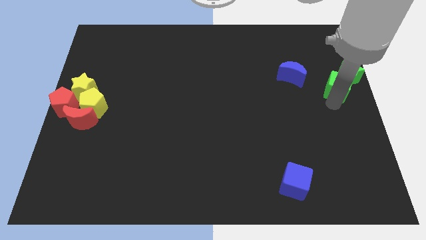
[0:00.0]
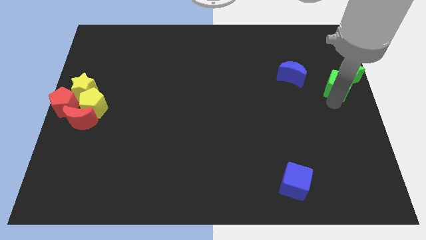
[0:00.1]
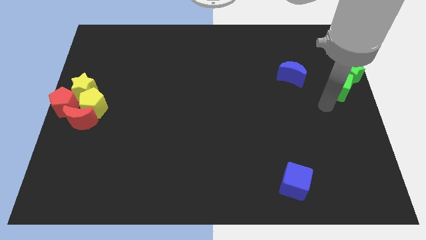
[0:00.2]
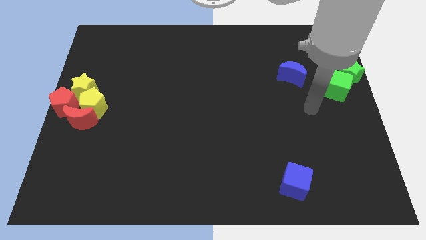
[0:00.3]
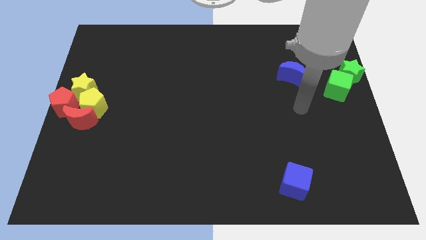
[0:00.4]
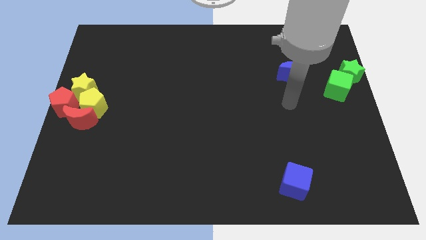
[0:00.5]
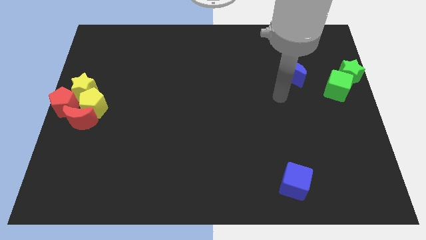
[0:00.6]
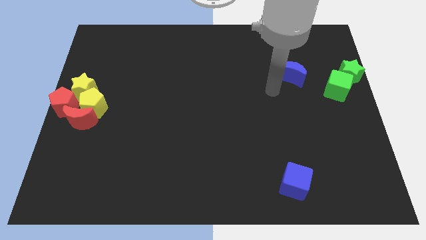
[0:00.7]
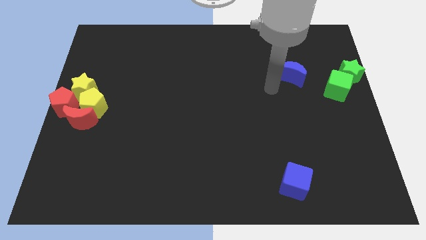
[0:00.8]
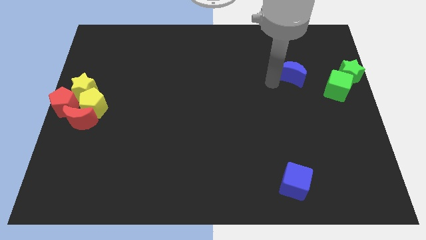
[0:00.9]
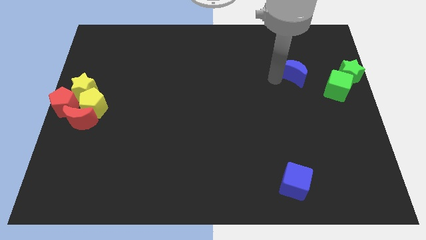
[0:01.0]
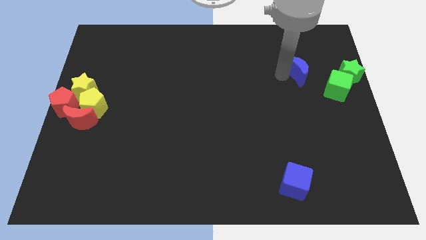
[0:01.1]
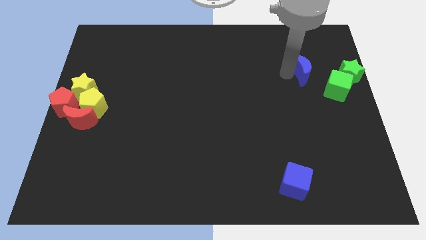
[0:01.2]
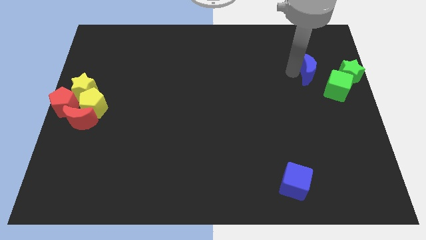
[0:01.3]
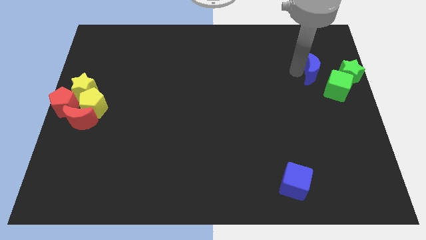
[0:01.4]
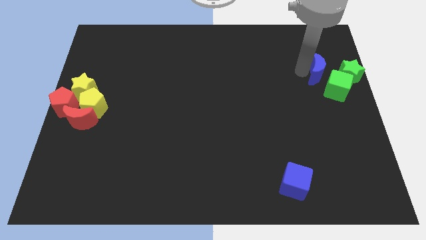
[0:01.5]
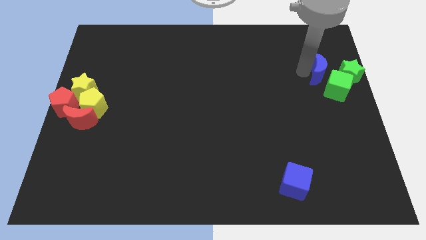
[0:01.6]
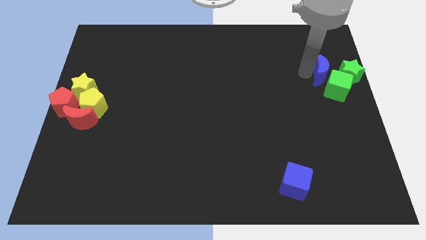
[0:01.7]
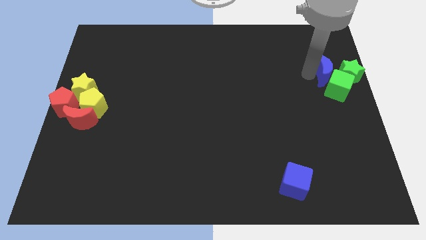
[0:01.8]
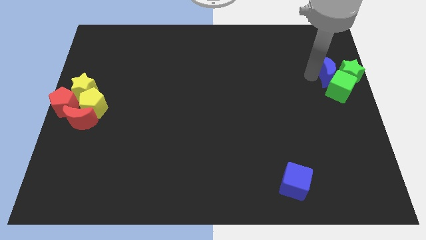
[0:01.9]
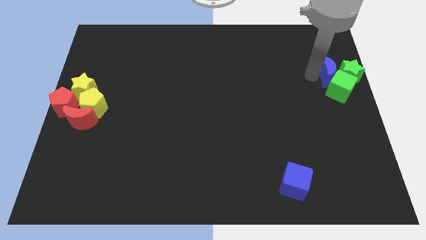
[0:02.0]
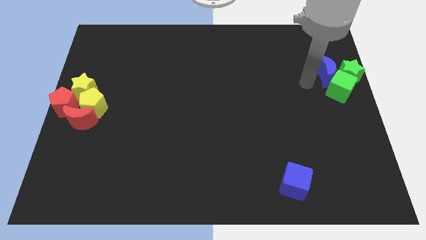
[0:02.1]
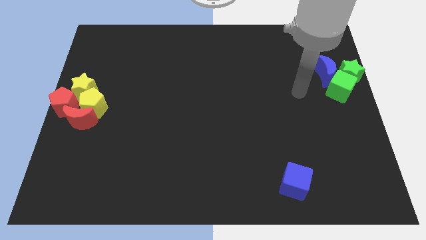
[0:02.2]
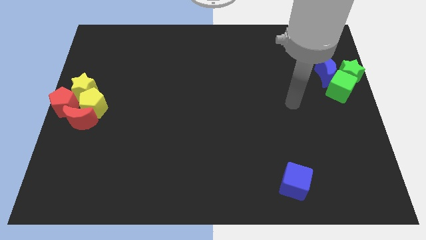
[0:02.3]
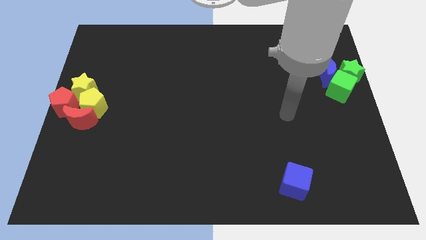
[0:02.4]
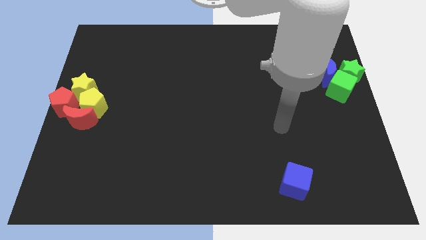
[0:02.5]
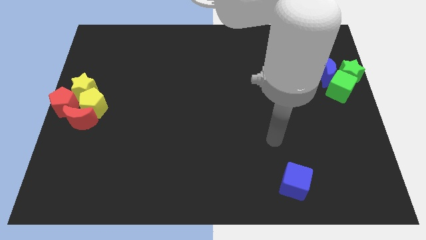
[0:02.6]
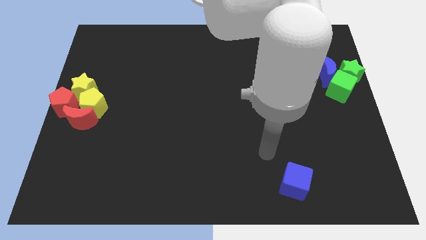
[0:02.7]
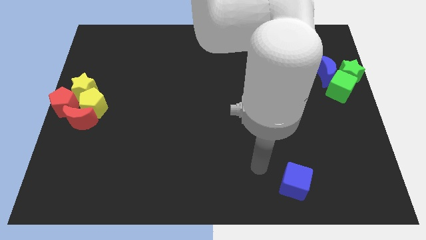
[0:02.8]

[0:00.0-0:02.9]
push the blue moon into the green blocks

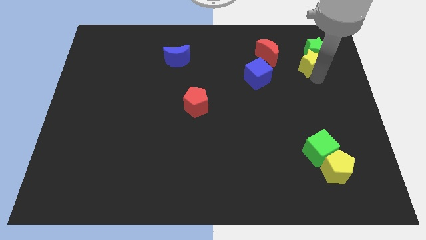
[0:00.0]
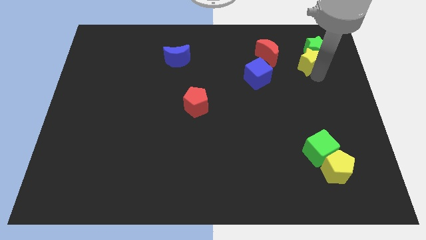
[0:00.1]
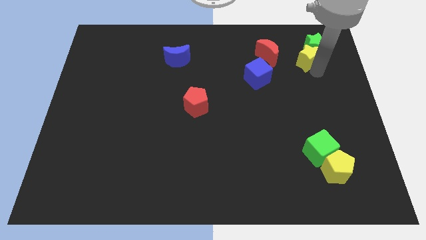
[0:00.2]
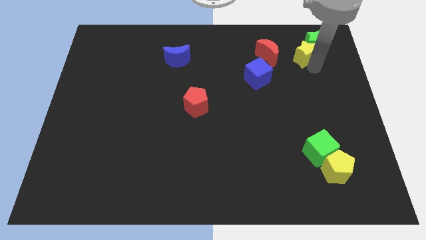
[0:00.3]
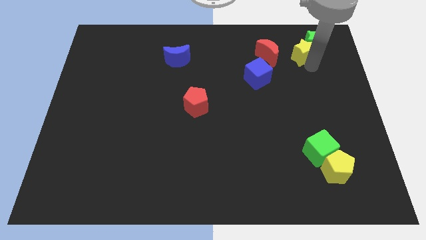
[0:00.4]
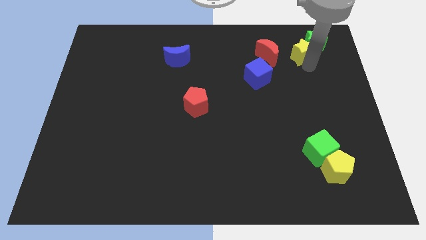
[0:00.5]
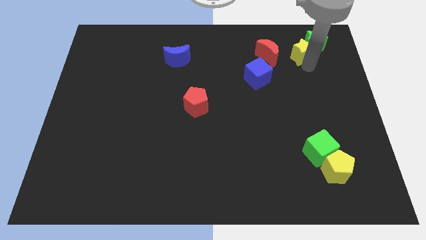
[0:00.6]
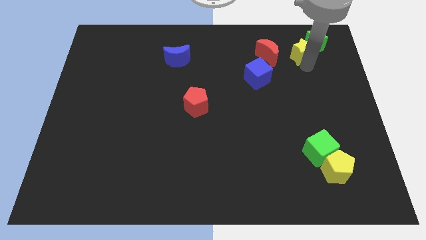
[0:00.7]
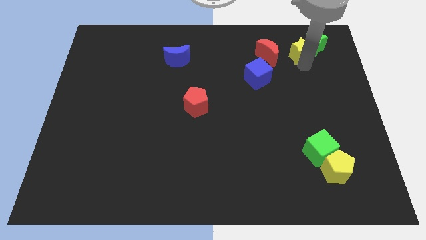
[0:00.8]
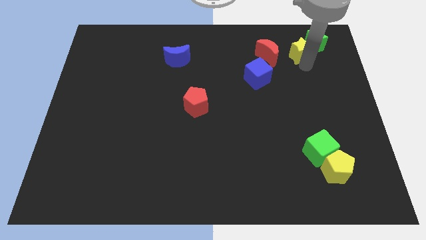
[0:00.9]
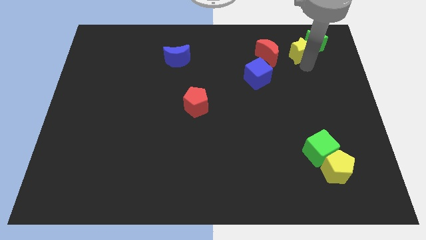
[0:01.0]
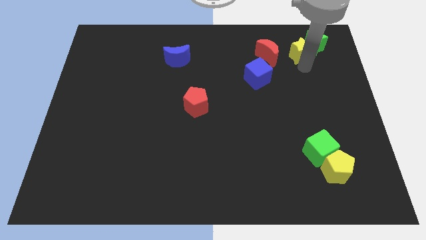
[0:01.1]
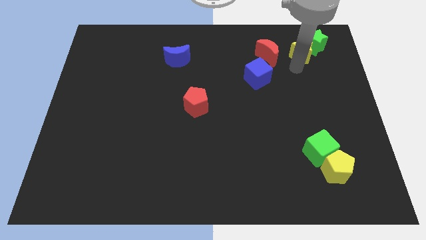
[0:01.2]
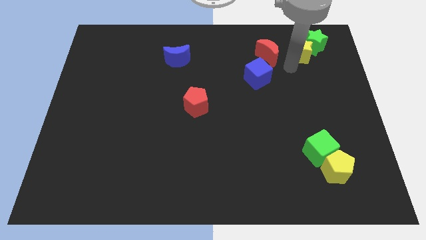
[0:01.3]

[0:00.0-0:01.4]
move yellow star with the green star towards the top right

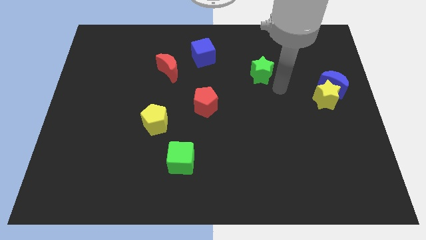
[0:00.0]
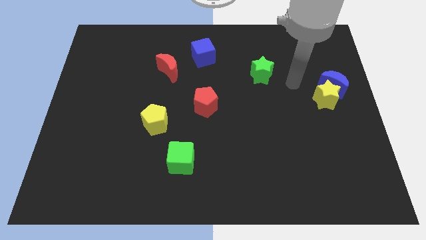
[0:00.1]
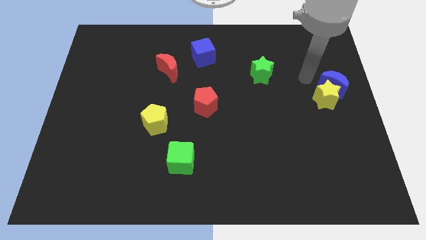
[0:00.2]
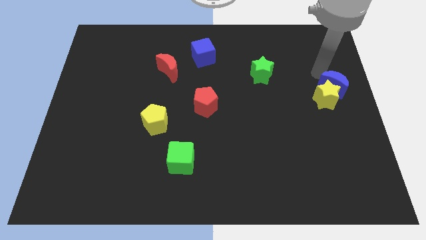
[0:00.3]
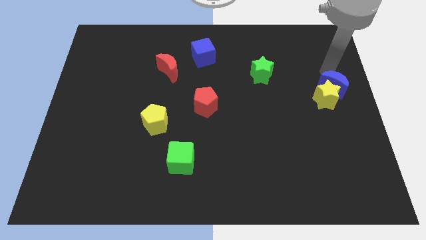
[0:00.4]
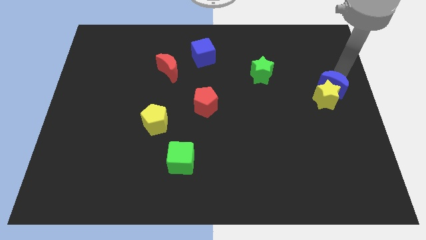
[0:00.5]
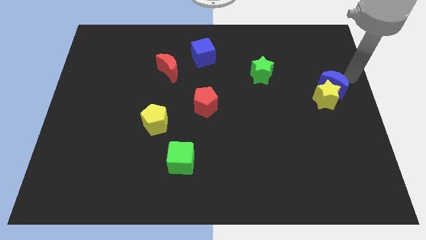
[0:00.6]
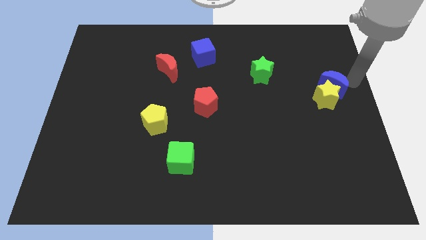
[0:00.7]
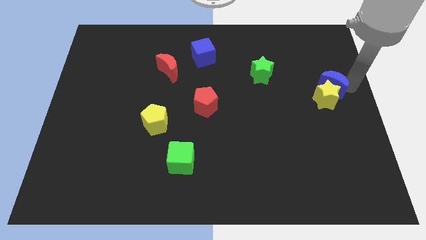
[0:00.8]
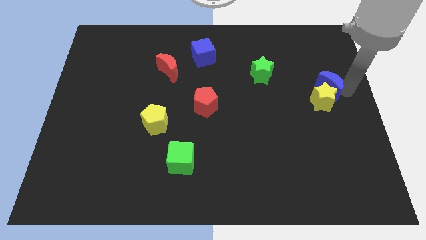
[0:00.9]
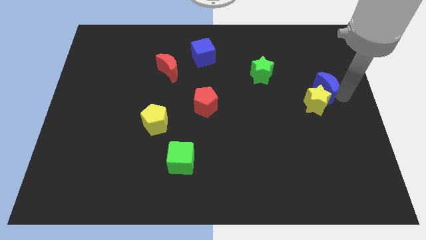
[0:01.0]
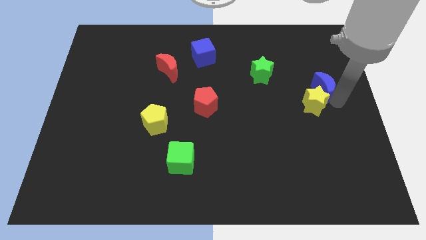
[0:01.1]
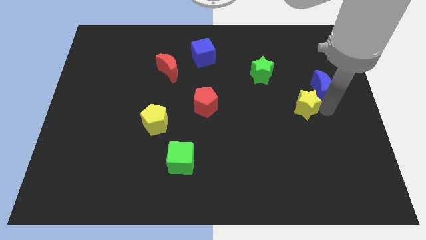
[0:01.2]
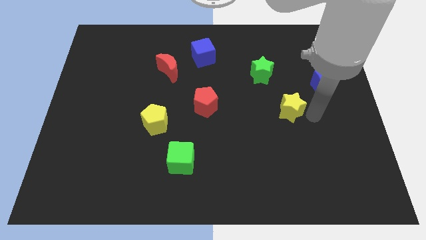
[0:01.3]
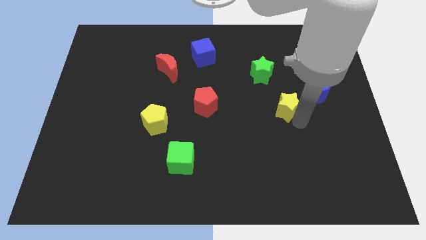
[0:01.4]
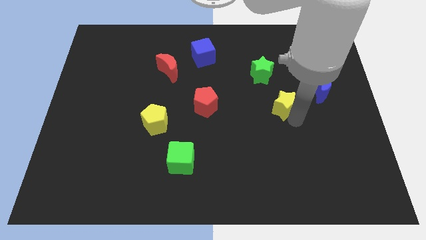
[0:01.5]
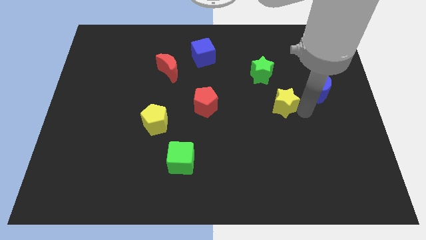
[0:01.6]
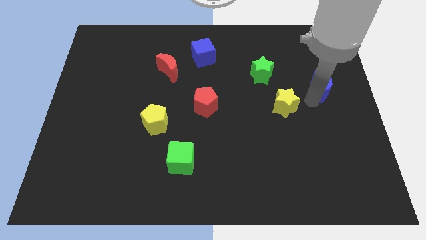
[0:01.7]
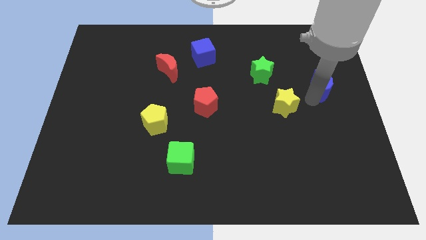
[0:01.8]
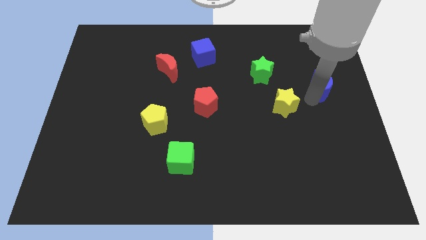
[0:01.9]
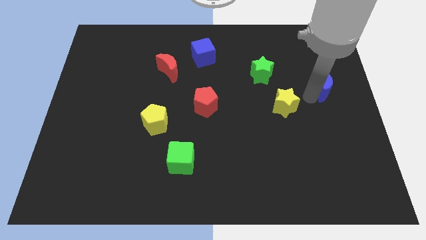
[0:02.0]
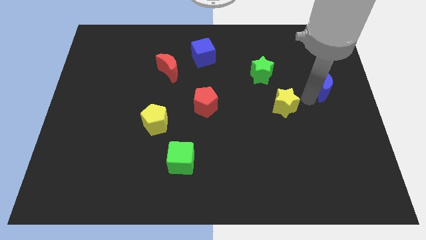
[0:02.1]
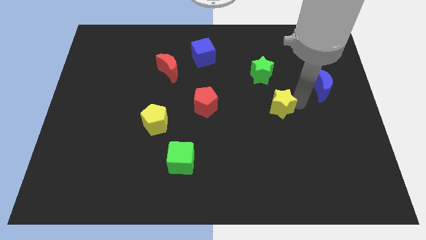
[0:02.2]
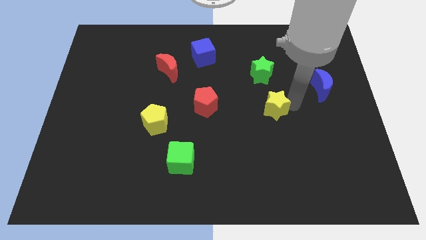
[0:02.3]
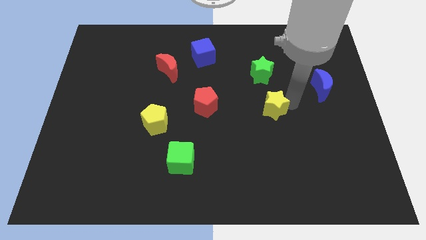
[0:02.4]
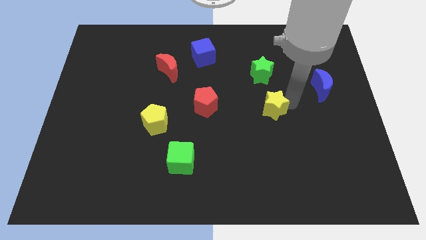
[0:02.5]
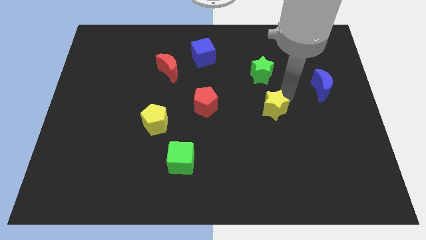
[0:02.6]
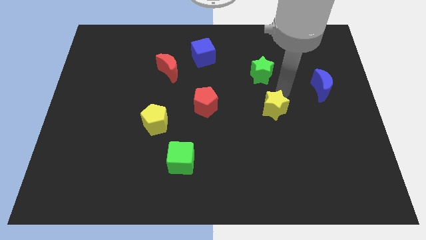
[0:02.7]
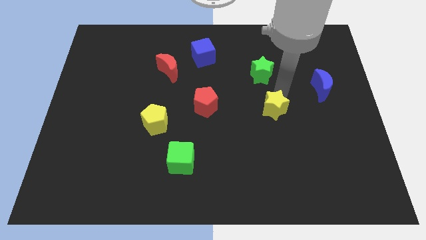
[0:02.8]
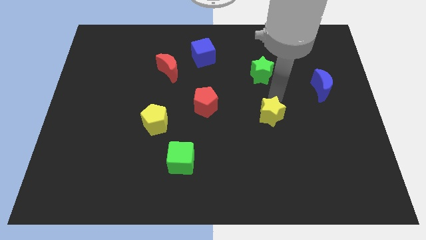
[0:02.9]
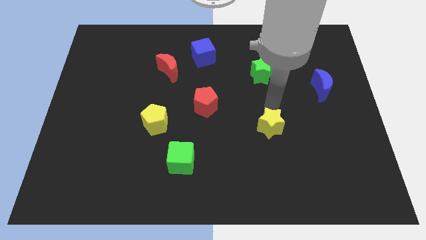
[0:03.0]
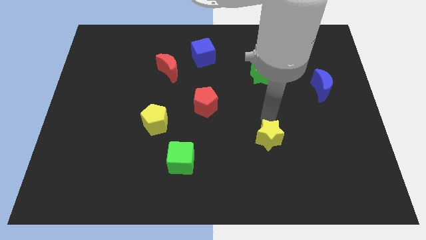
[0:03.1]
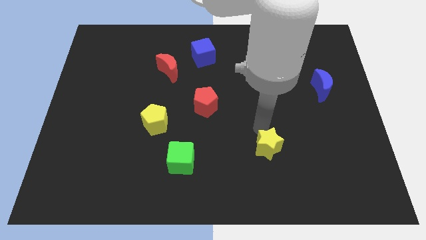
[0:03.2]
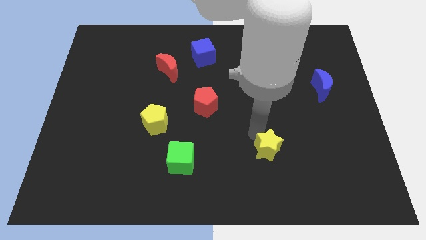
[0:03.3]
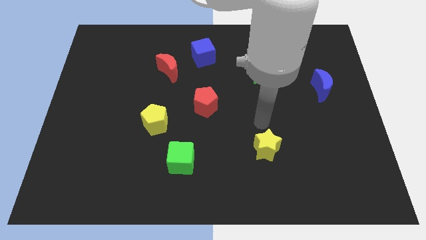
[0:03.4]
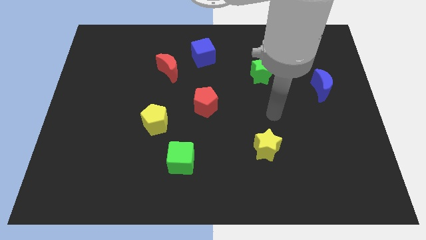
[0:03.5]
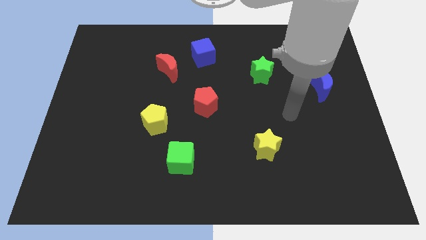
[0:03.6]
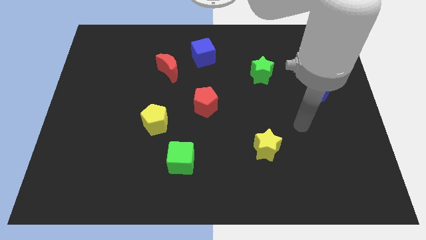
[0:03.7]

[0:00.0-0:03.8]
separate the yellow star and the blue crescent

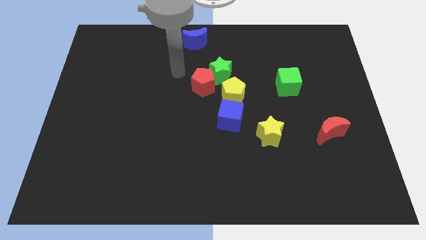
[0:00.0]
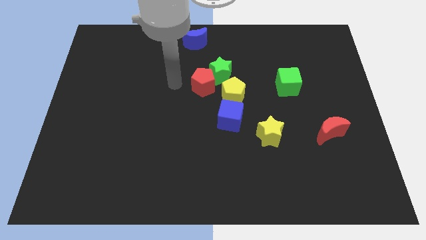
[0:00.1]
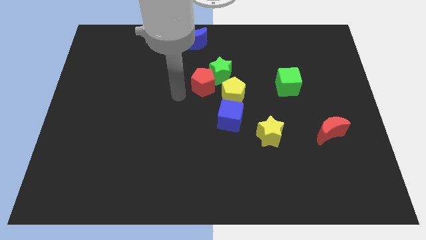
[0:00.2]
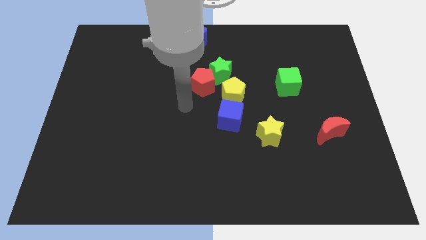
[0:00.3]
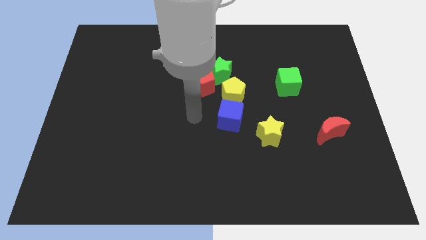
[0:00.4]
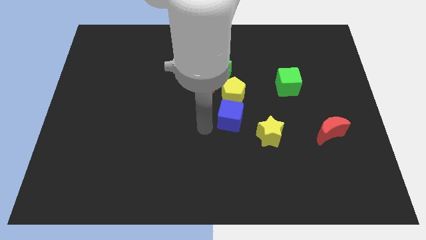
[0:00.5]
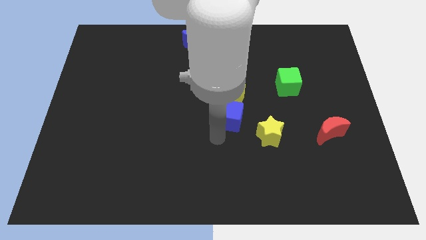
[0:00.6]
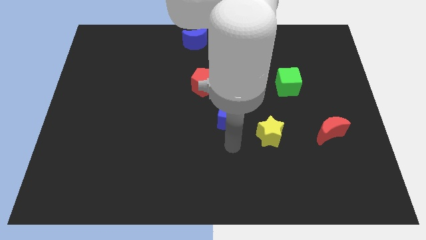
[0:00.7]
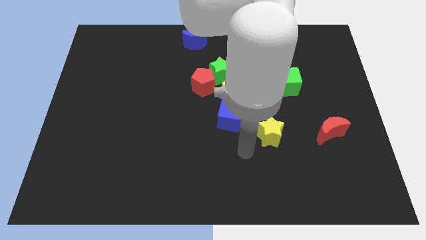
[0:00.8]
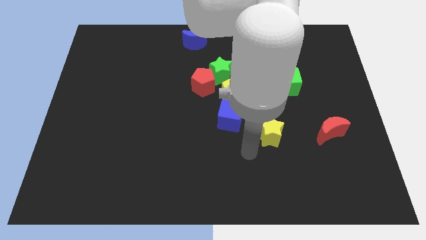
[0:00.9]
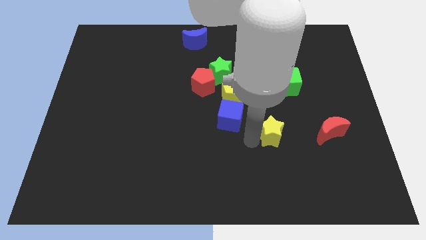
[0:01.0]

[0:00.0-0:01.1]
touch the left side of the yellow star
